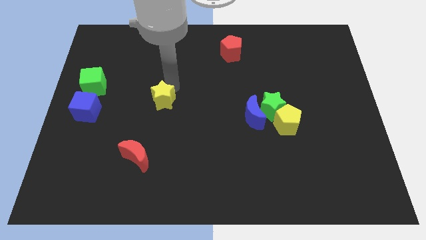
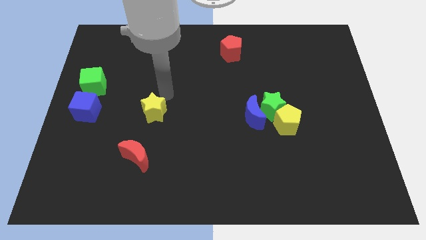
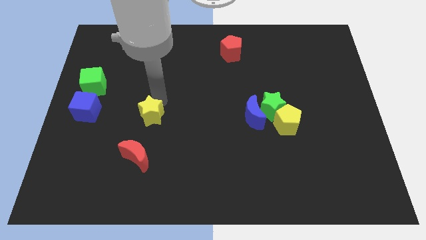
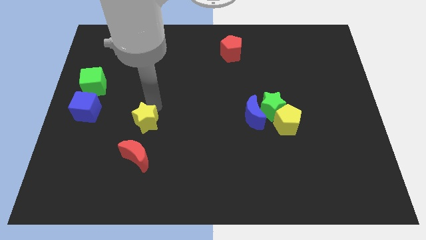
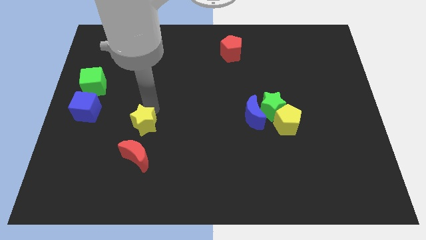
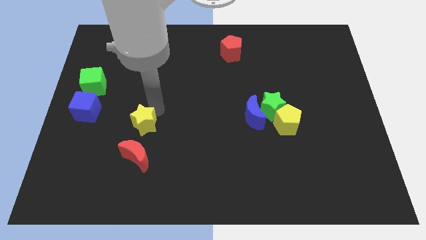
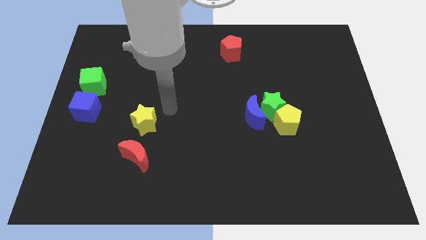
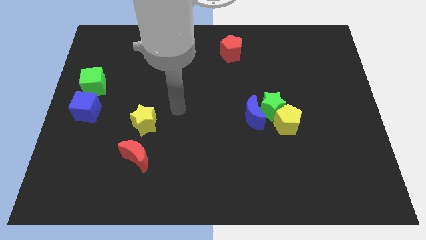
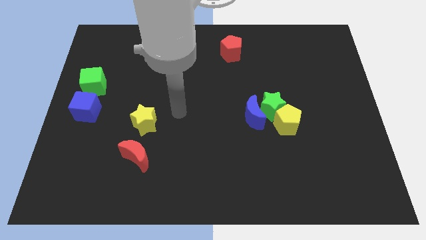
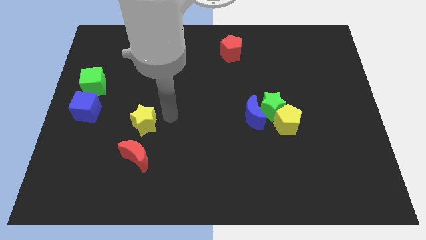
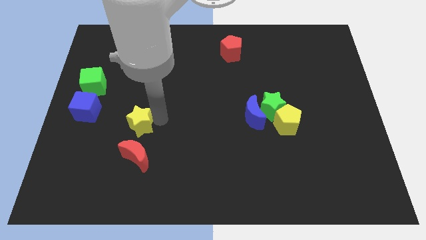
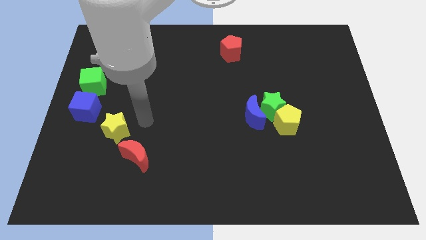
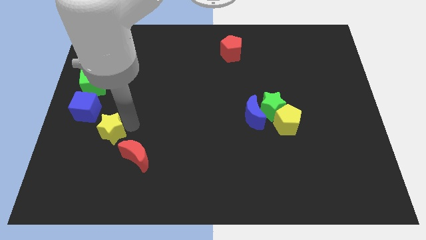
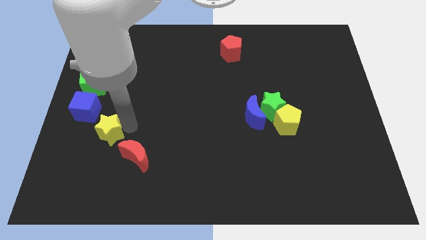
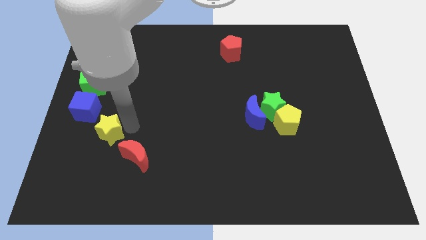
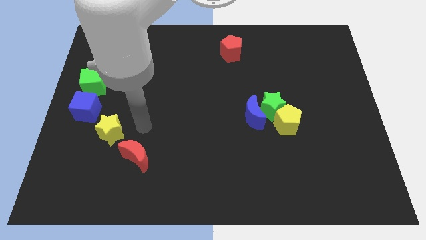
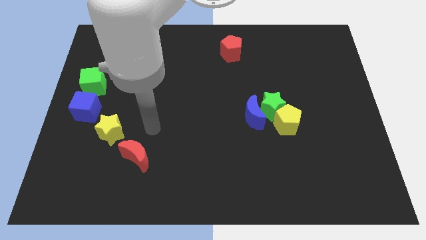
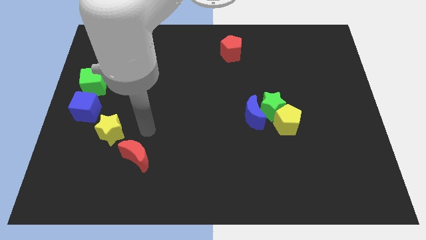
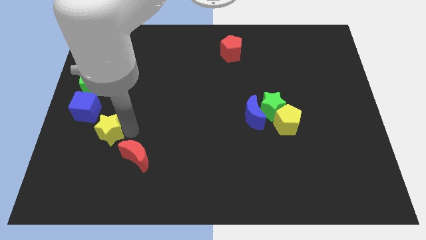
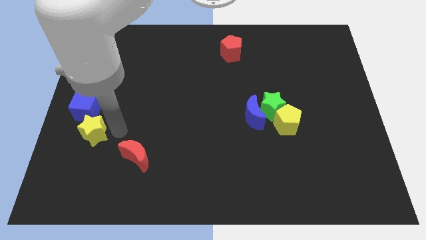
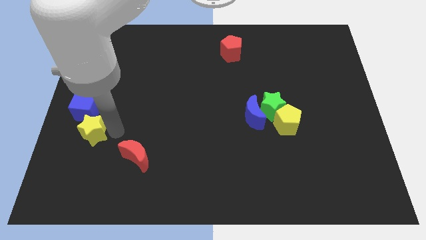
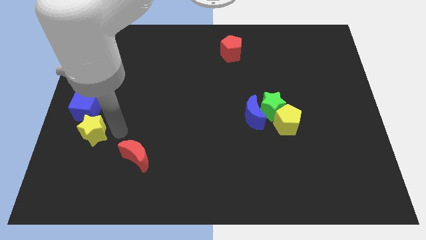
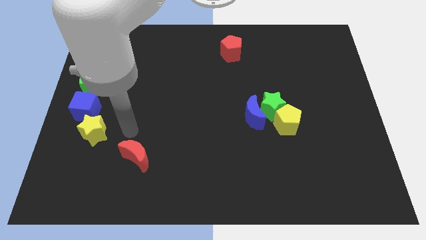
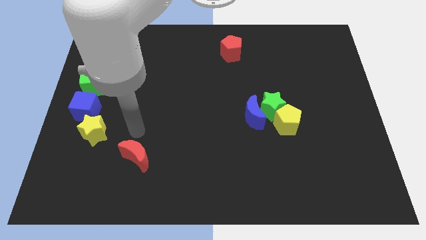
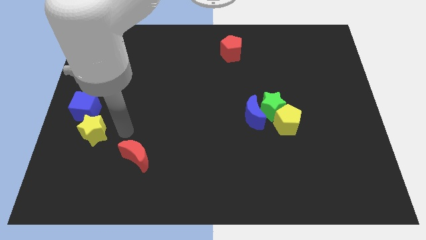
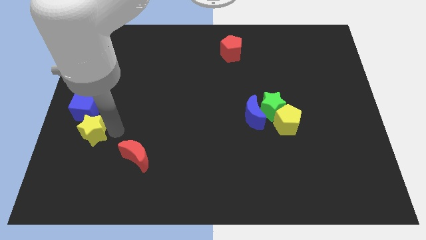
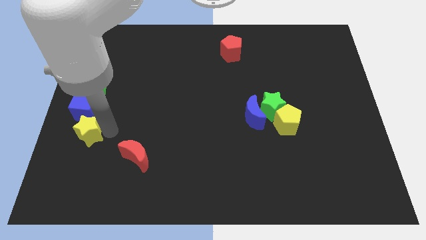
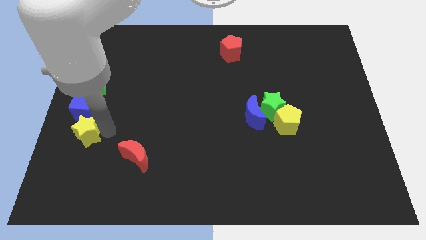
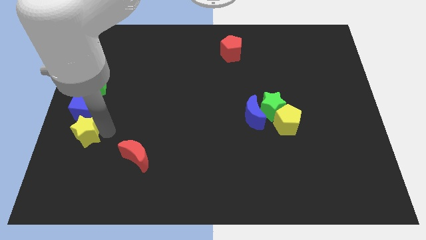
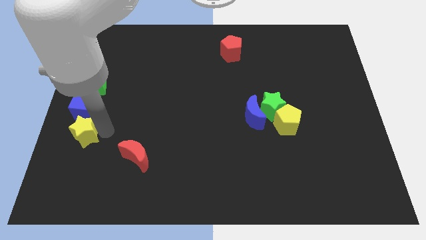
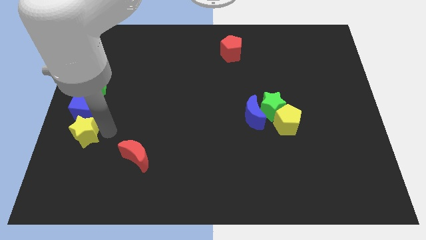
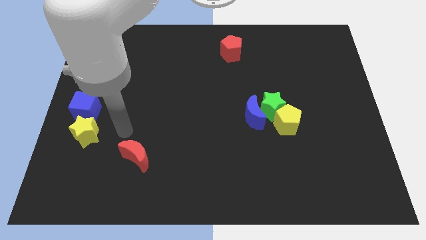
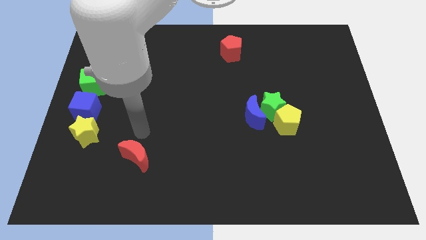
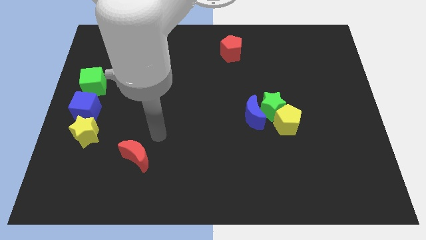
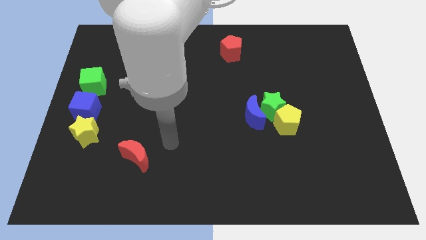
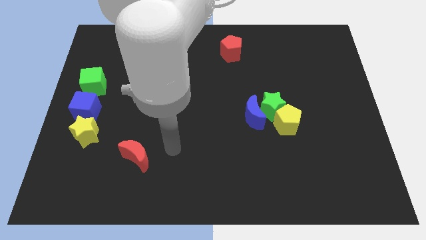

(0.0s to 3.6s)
push the yellow star below the blue cube

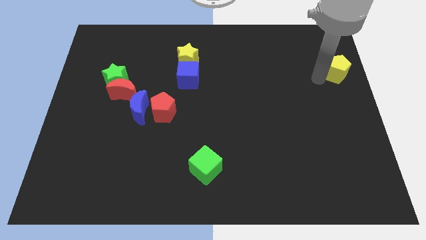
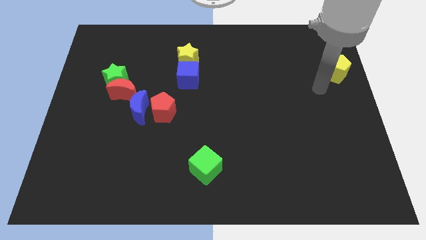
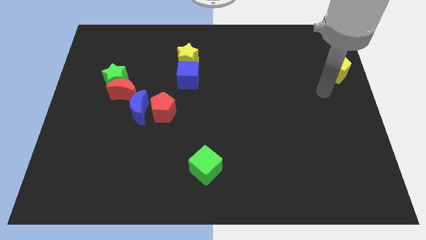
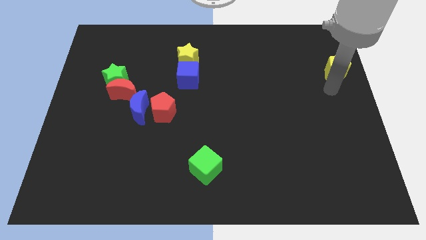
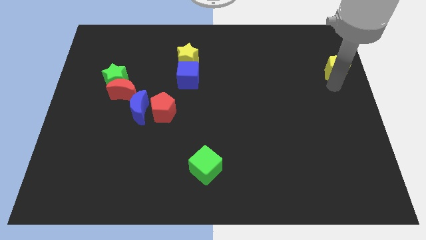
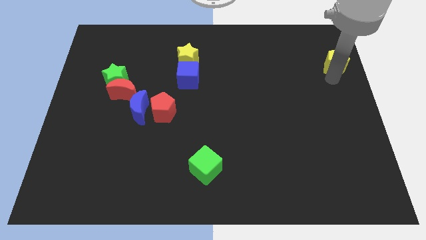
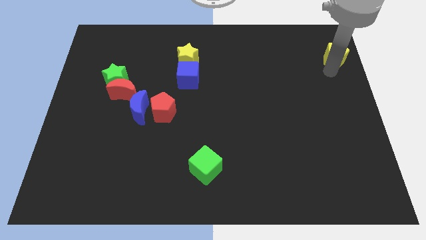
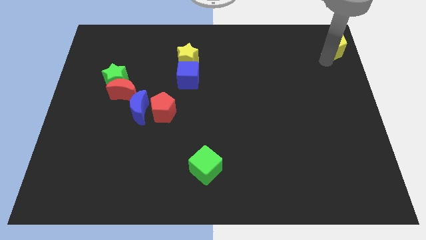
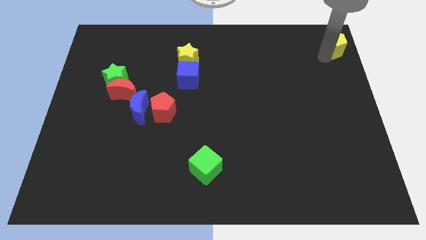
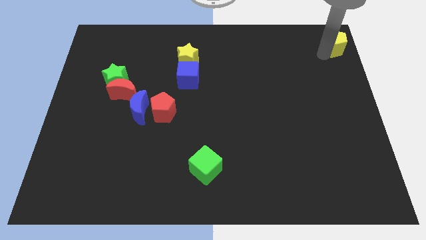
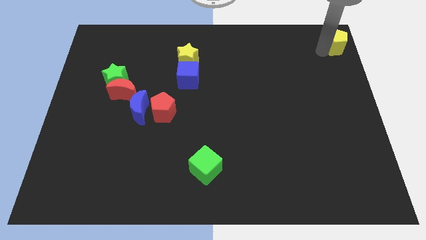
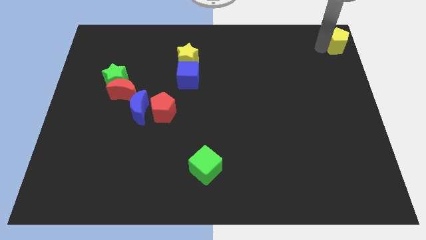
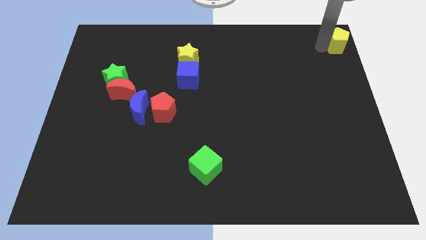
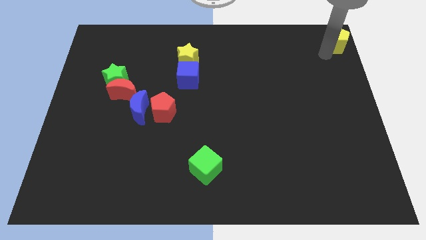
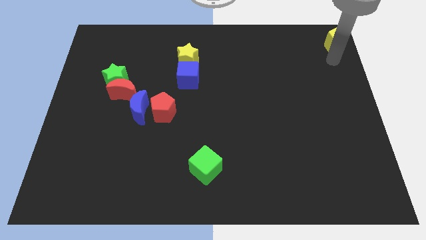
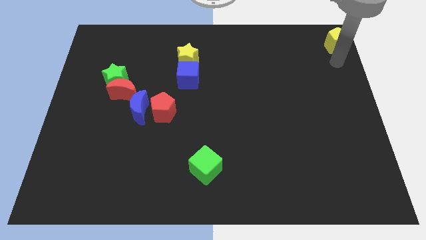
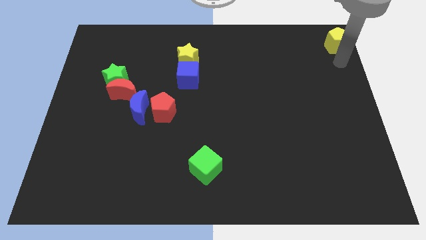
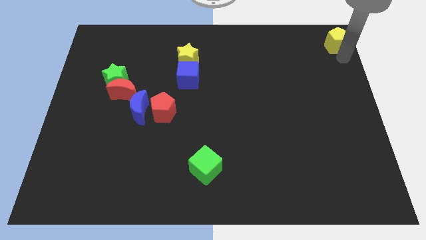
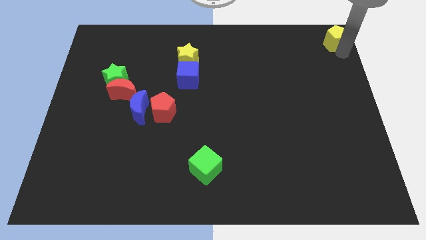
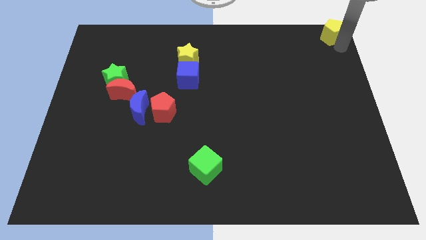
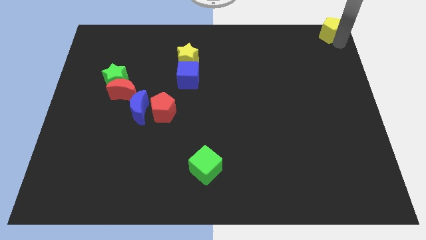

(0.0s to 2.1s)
move the yellow pentagon to the top right corner of the board

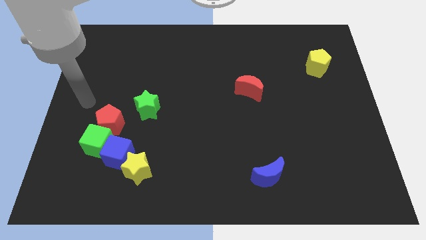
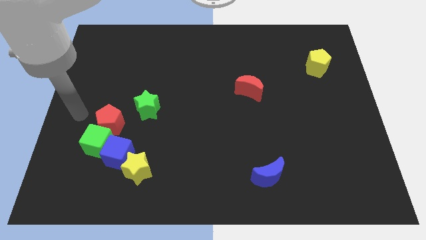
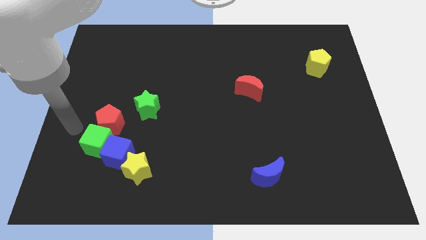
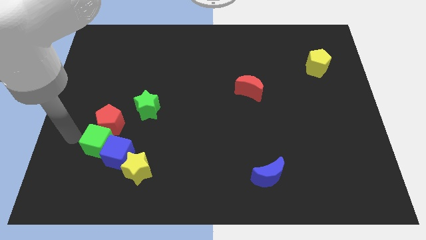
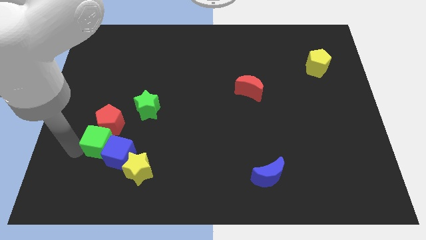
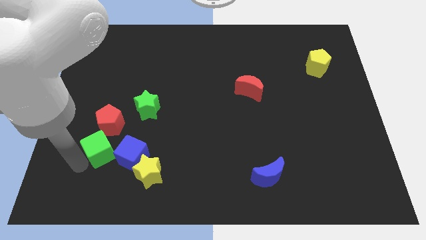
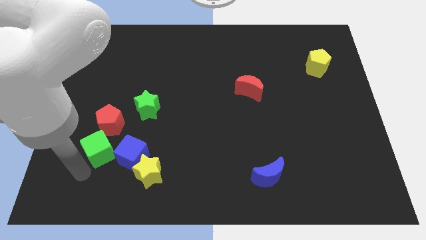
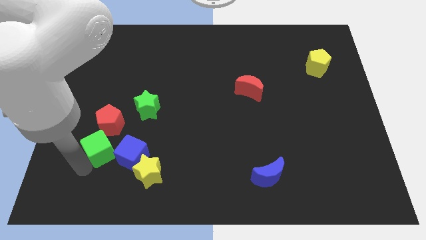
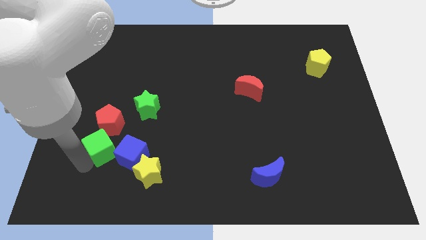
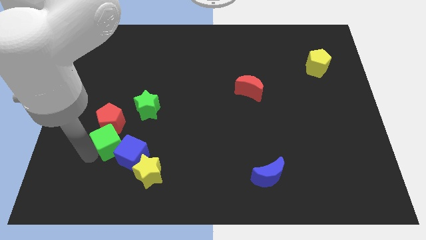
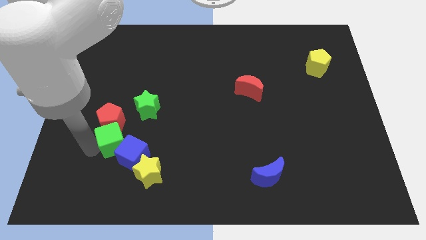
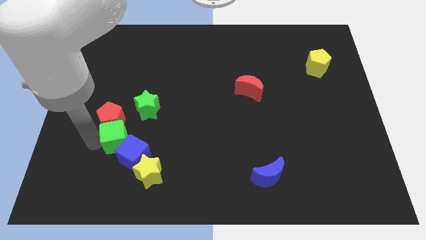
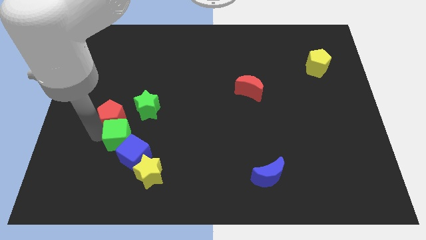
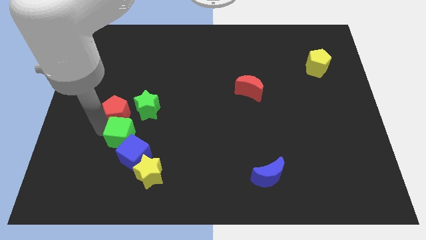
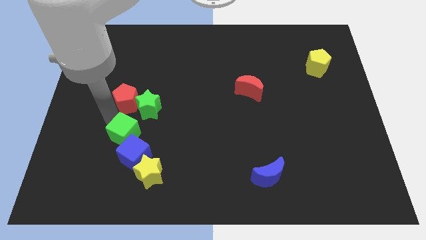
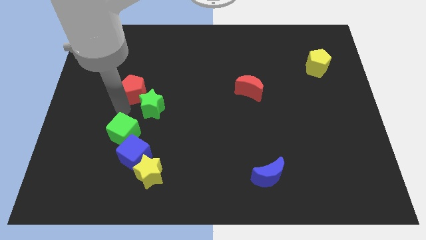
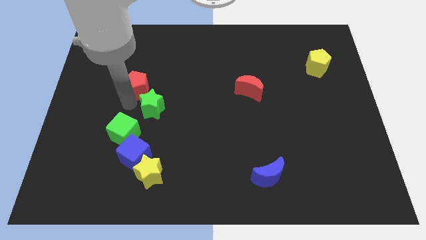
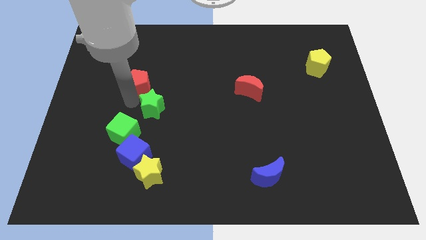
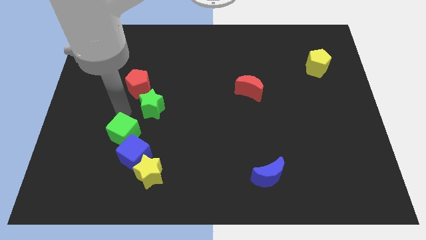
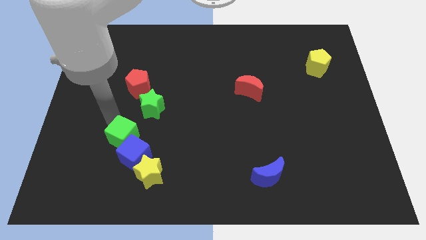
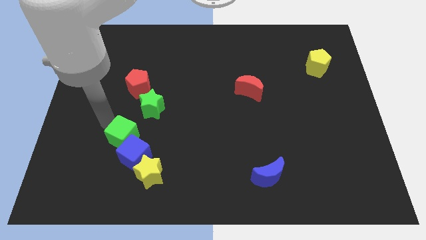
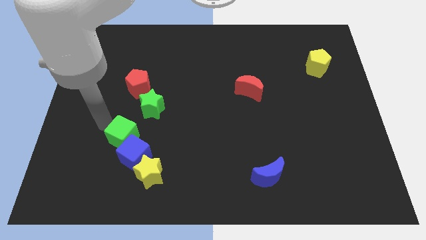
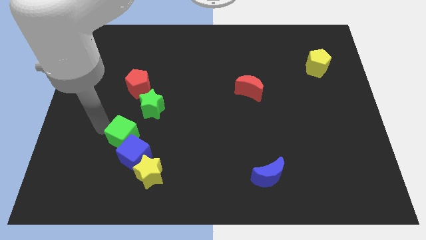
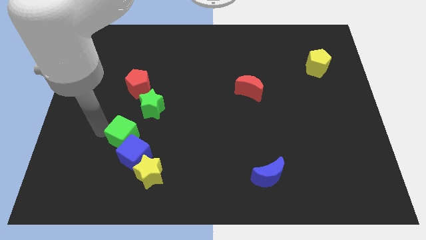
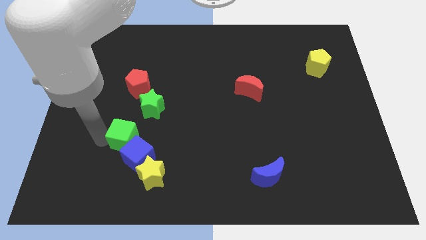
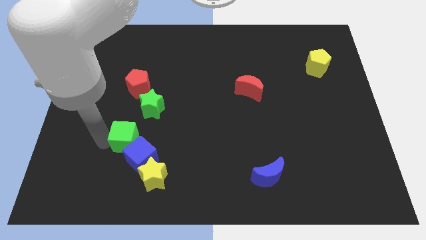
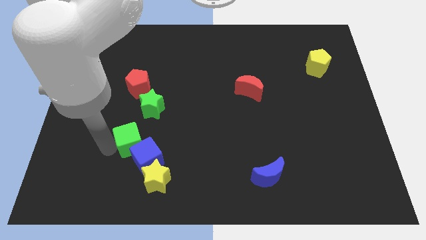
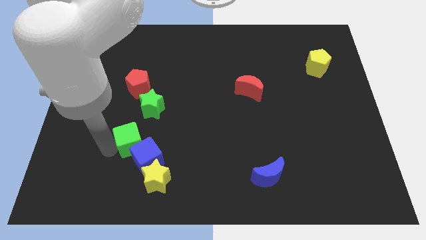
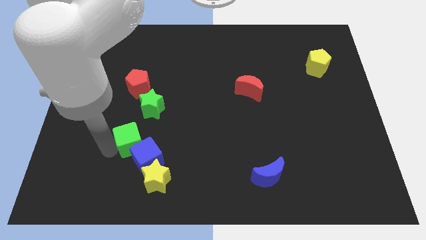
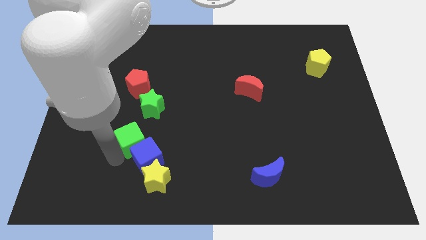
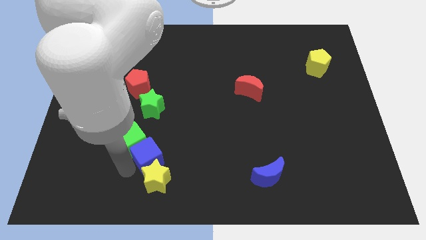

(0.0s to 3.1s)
move the red pentagon away from the green cube

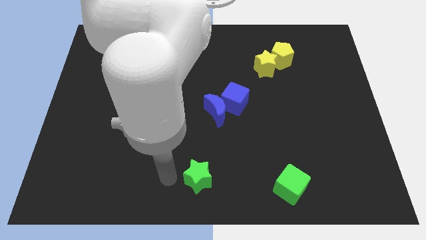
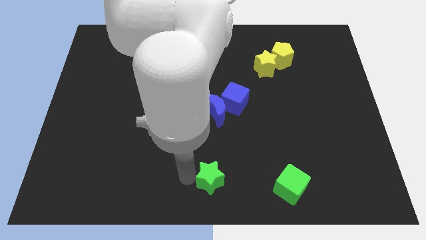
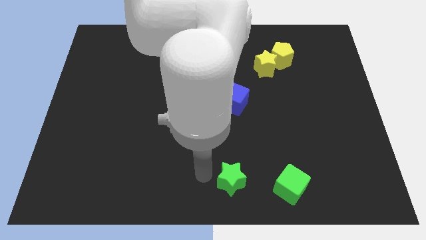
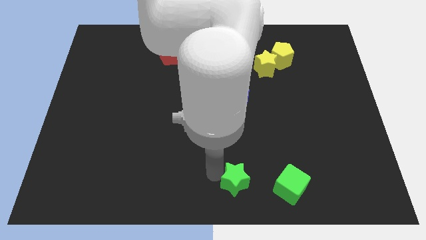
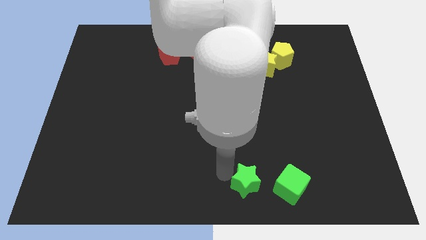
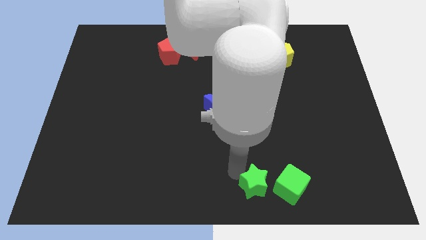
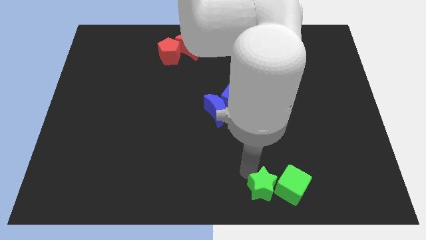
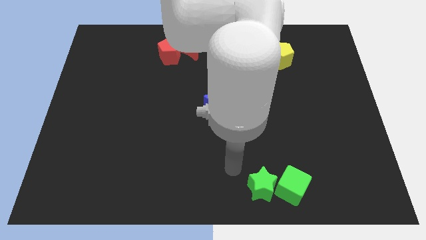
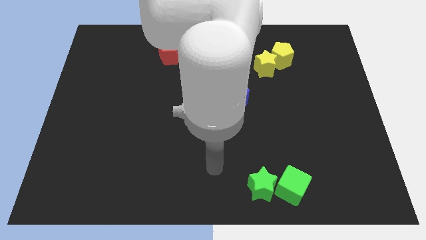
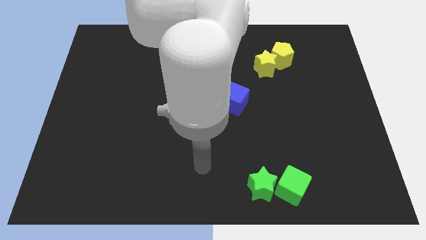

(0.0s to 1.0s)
push the green star into the green cube to the left
